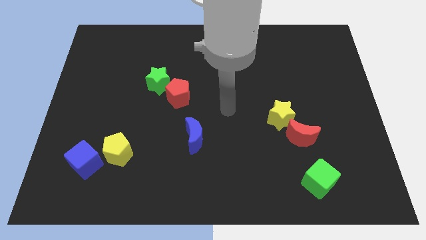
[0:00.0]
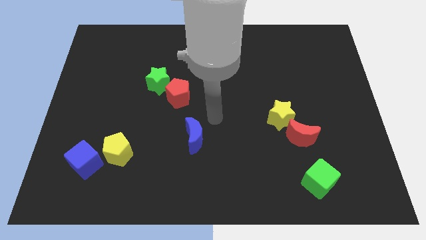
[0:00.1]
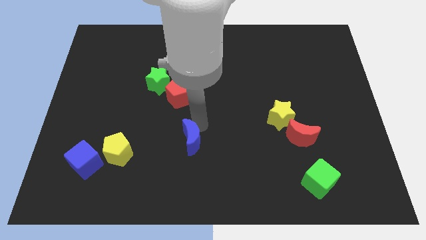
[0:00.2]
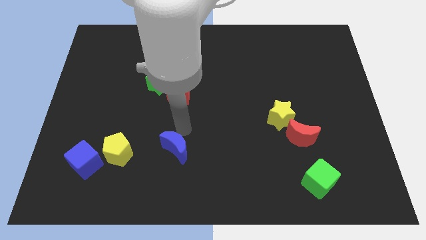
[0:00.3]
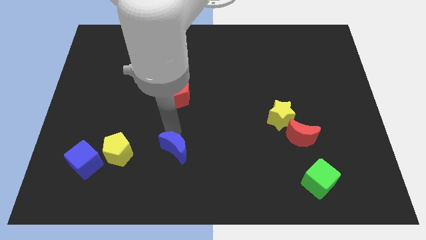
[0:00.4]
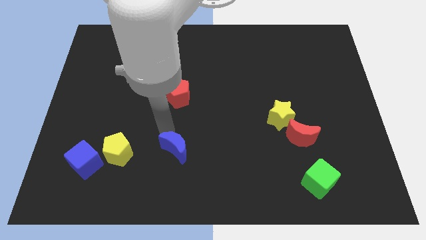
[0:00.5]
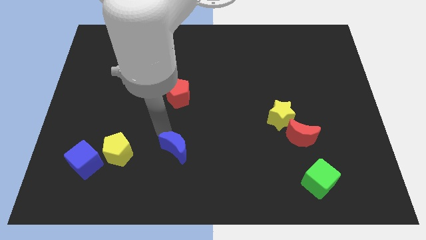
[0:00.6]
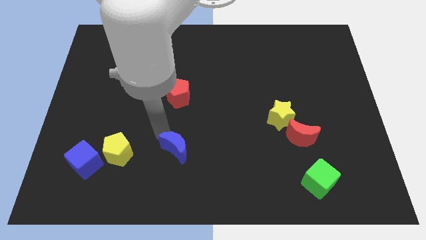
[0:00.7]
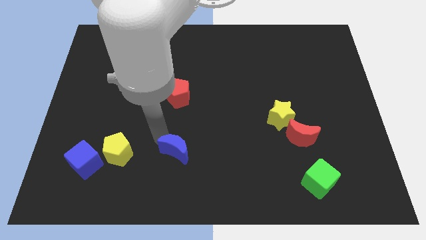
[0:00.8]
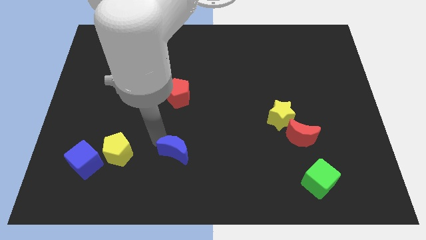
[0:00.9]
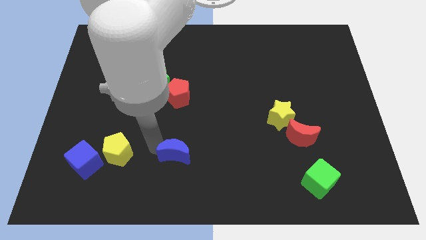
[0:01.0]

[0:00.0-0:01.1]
touch the blue moon

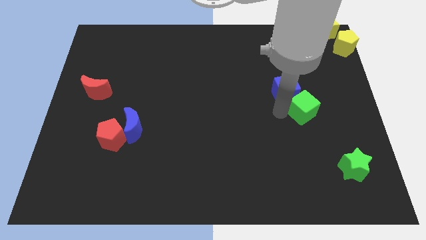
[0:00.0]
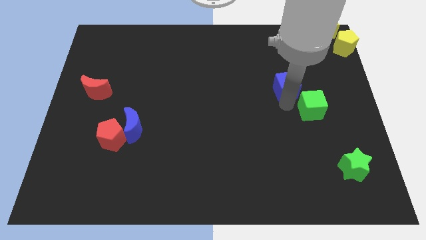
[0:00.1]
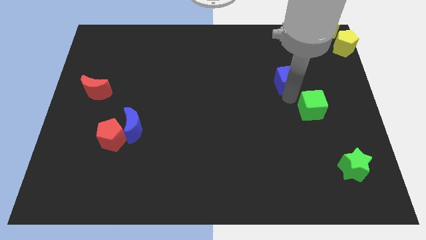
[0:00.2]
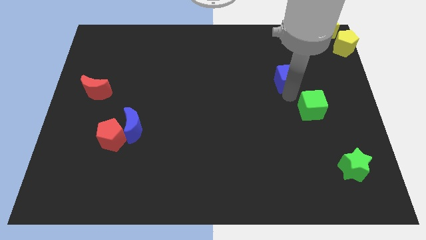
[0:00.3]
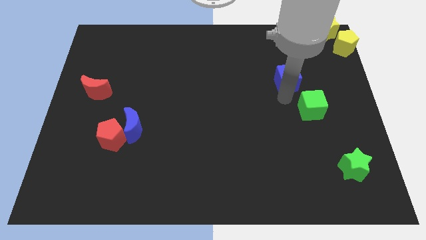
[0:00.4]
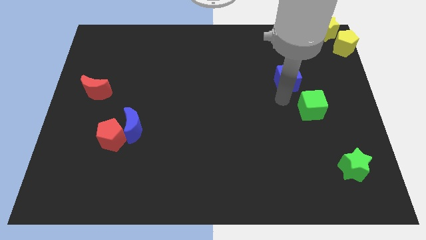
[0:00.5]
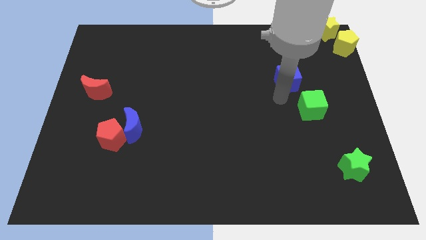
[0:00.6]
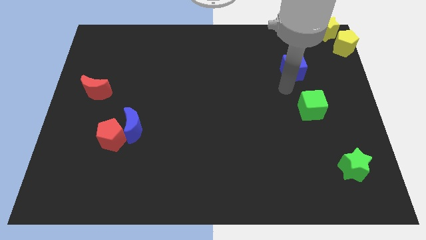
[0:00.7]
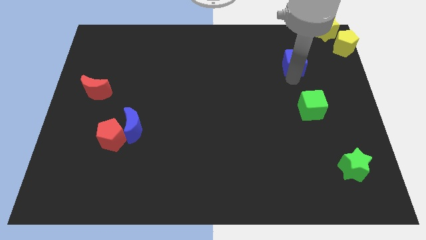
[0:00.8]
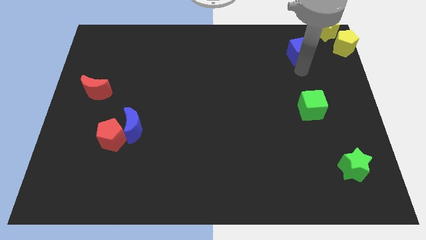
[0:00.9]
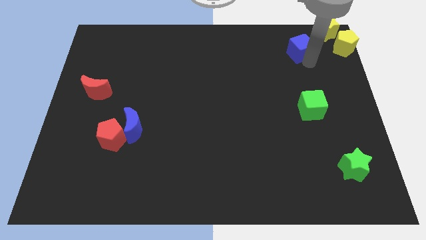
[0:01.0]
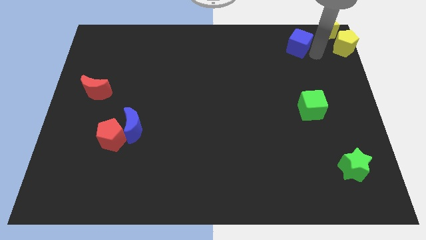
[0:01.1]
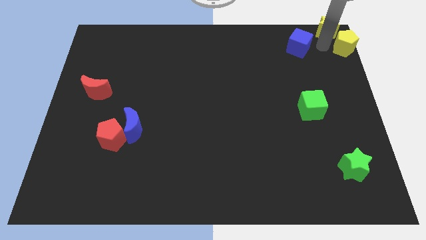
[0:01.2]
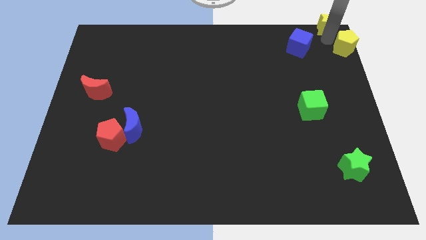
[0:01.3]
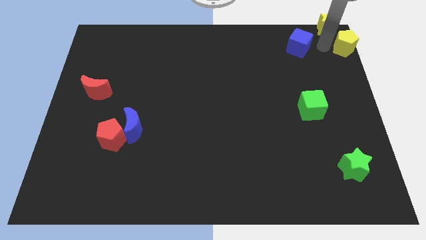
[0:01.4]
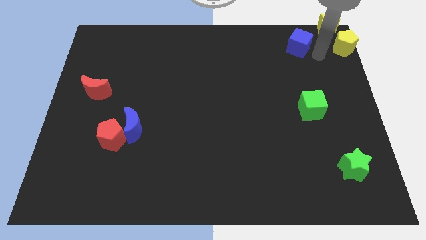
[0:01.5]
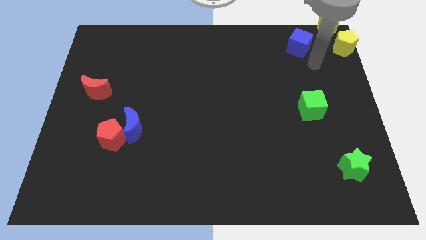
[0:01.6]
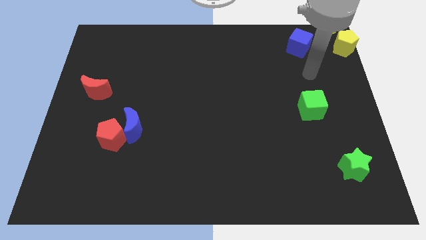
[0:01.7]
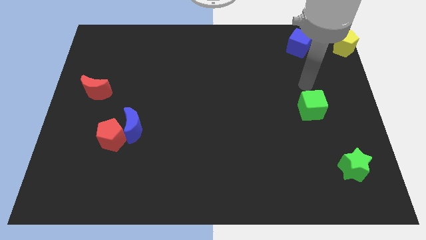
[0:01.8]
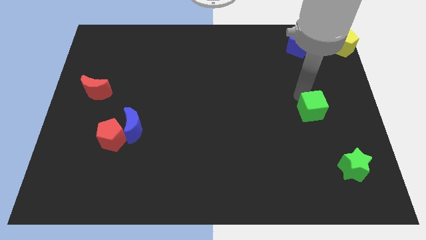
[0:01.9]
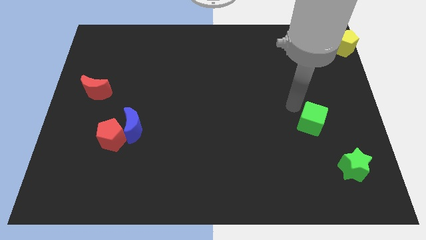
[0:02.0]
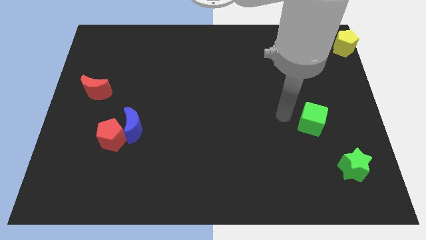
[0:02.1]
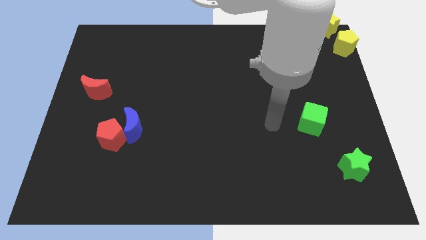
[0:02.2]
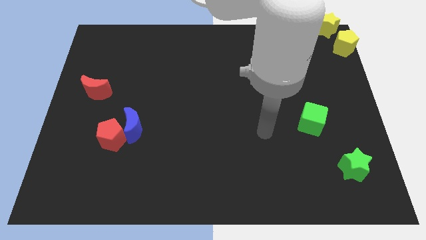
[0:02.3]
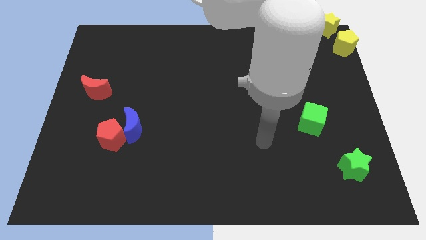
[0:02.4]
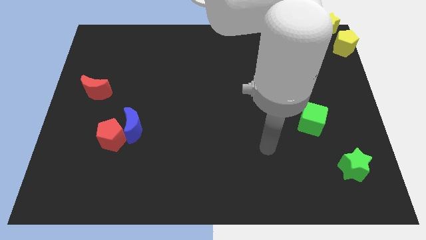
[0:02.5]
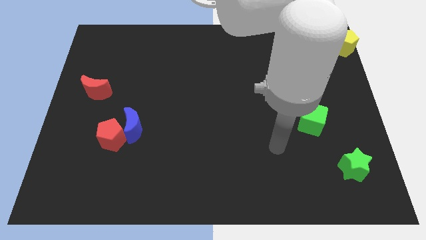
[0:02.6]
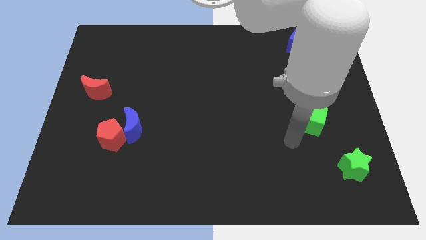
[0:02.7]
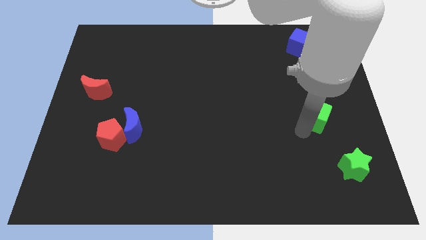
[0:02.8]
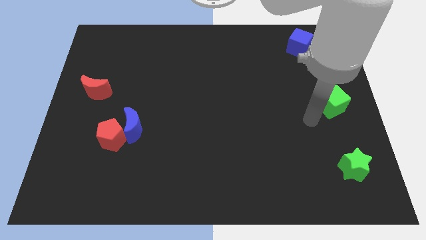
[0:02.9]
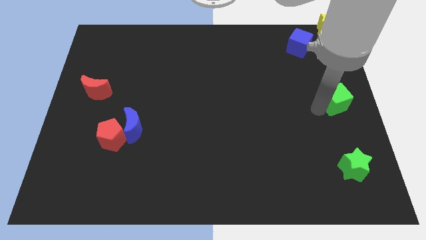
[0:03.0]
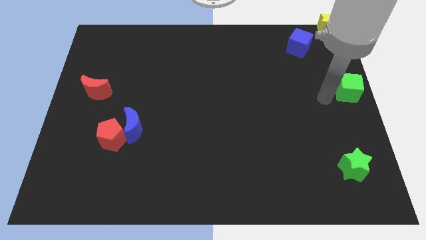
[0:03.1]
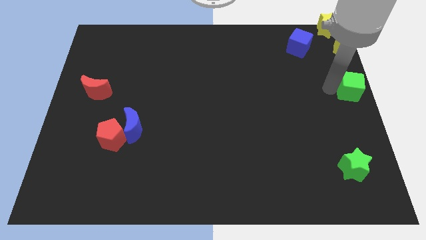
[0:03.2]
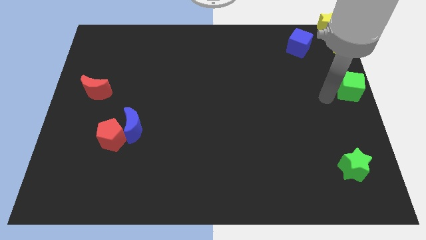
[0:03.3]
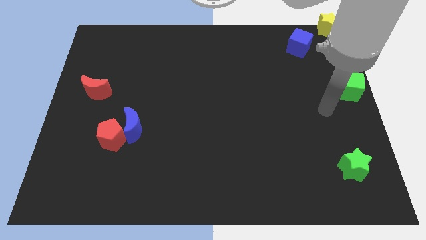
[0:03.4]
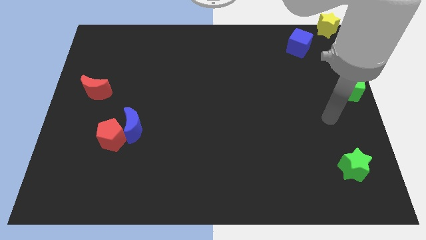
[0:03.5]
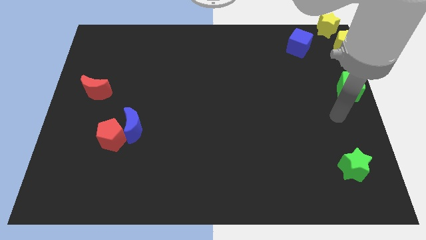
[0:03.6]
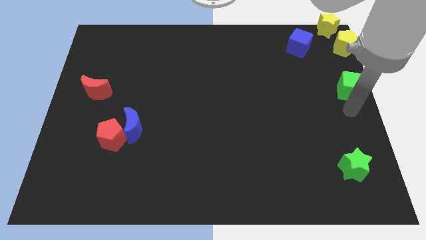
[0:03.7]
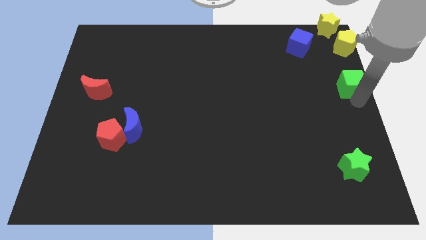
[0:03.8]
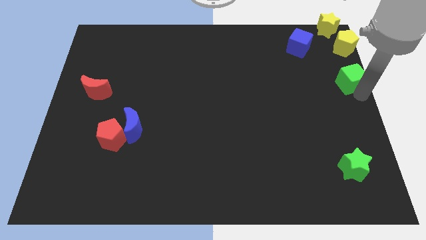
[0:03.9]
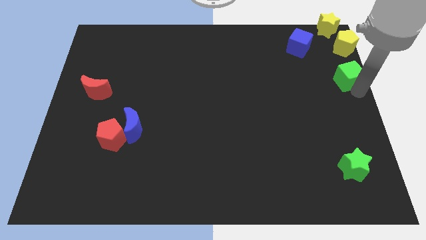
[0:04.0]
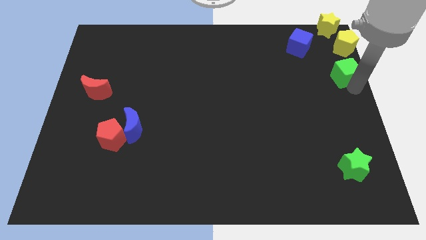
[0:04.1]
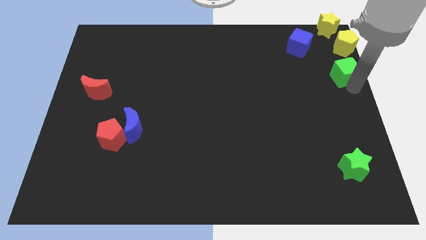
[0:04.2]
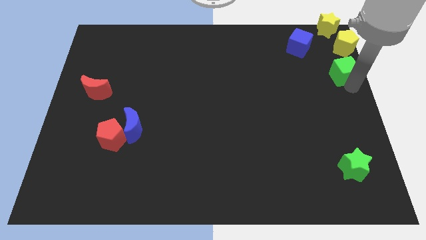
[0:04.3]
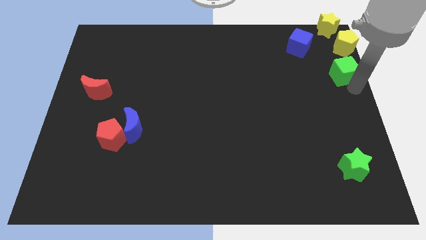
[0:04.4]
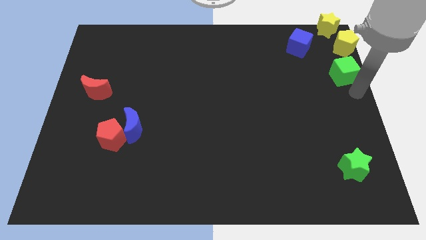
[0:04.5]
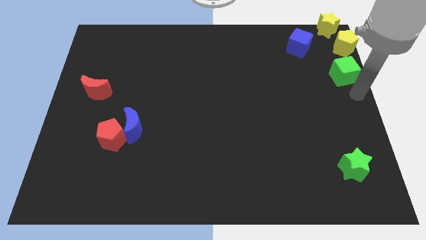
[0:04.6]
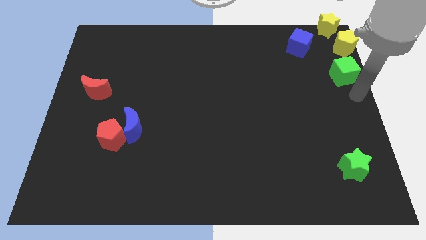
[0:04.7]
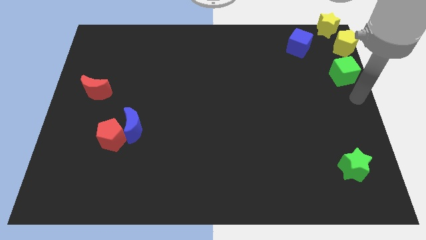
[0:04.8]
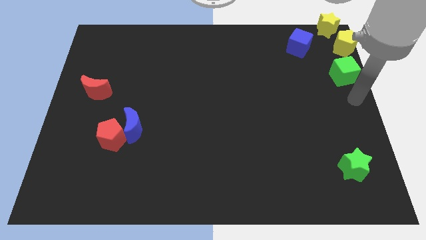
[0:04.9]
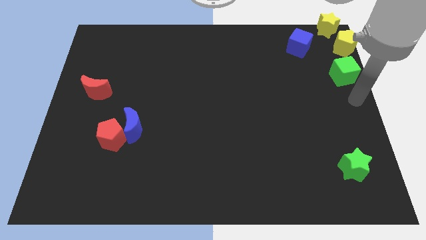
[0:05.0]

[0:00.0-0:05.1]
push the cubes to the top right

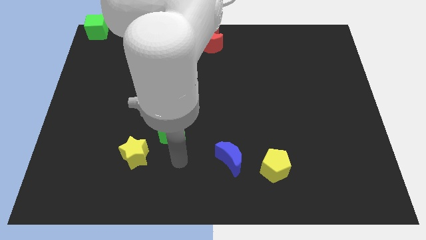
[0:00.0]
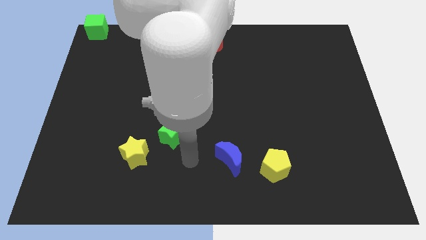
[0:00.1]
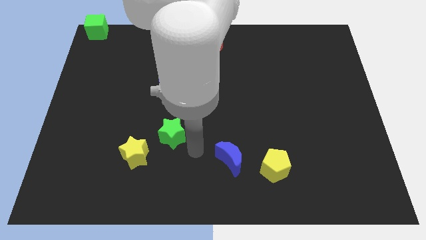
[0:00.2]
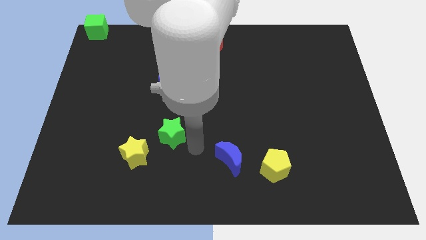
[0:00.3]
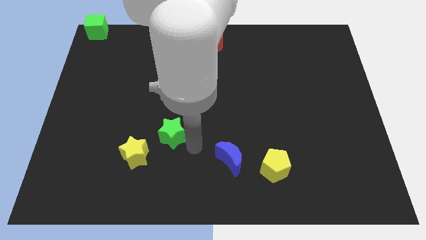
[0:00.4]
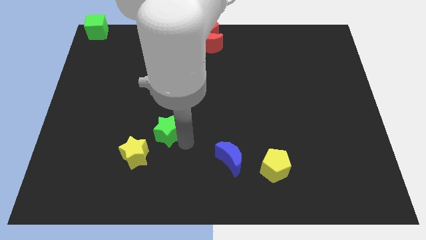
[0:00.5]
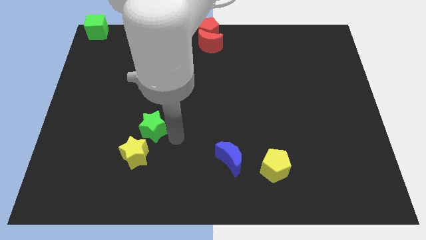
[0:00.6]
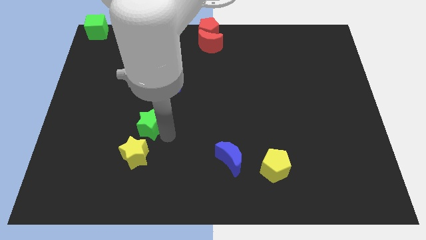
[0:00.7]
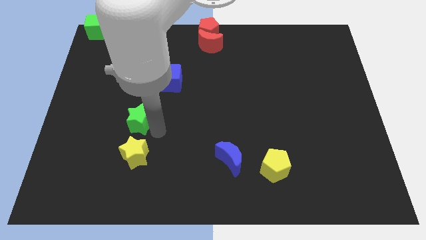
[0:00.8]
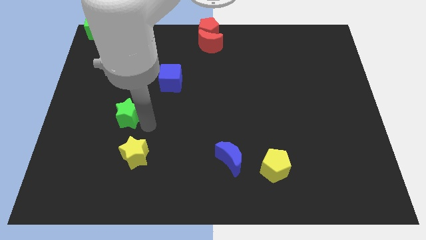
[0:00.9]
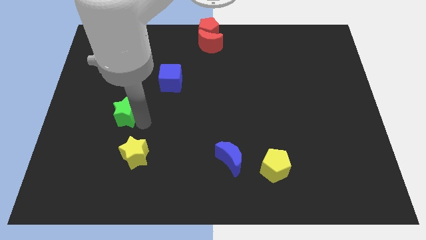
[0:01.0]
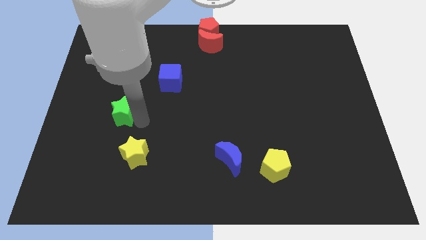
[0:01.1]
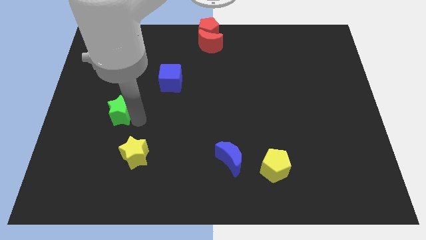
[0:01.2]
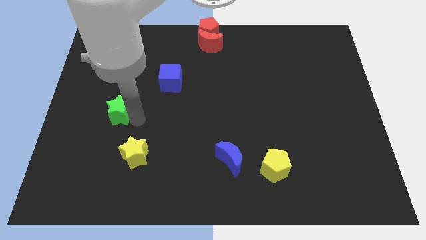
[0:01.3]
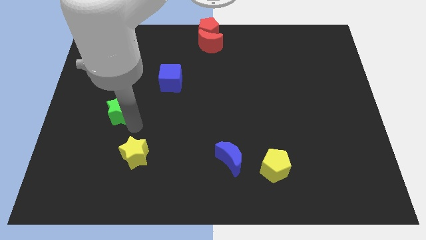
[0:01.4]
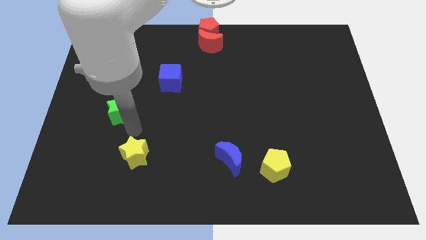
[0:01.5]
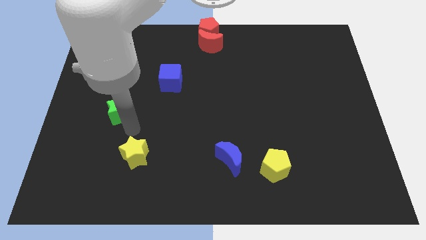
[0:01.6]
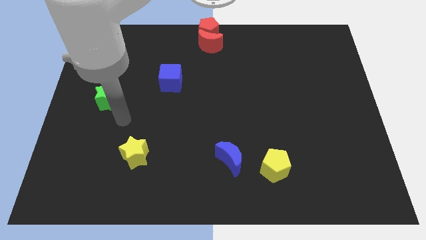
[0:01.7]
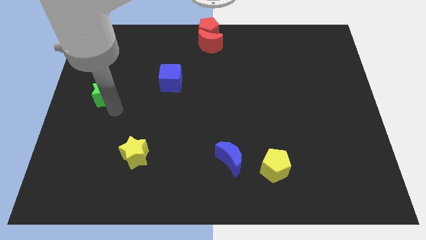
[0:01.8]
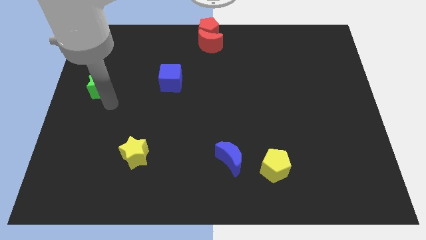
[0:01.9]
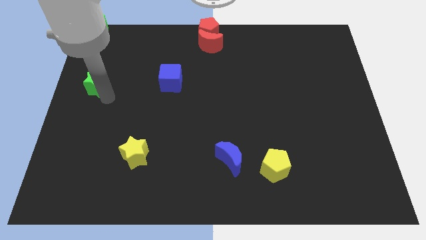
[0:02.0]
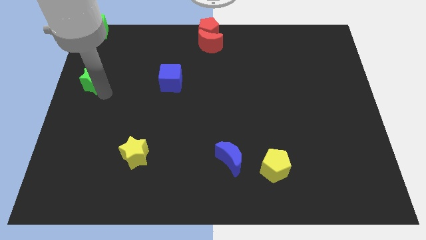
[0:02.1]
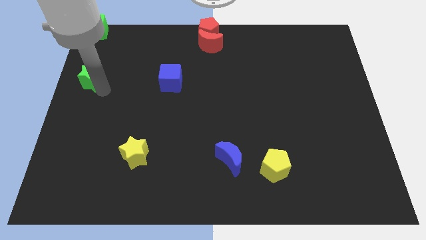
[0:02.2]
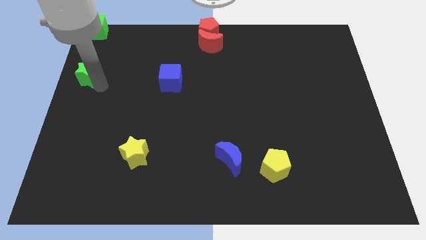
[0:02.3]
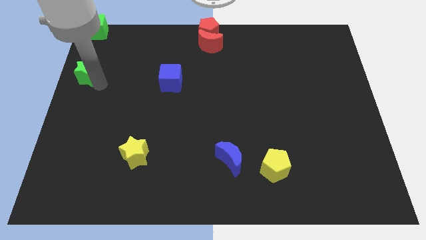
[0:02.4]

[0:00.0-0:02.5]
push the green star below the green cube
